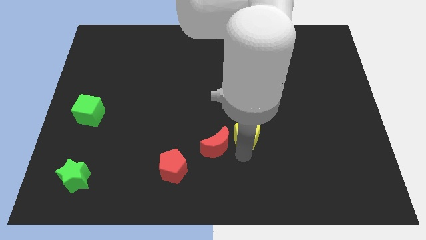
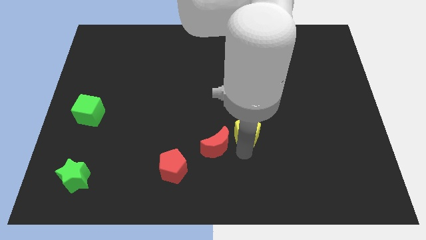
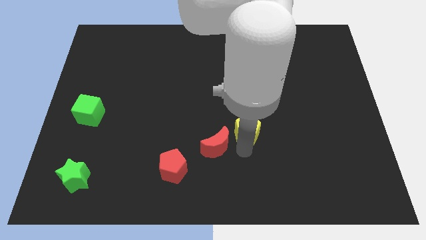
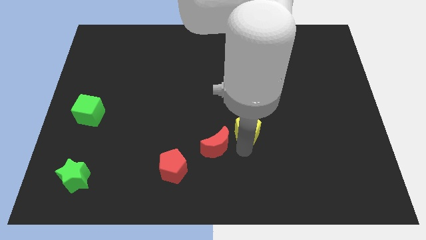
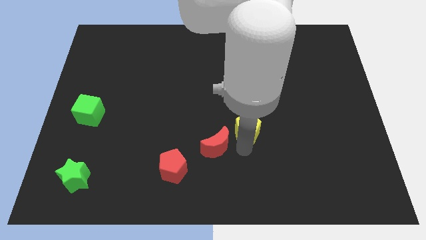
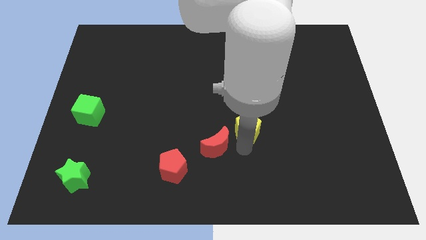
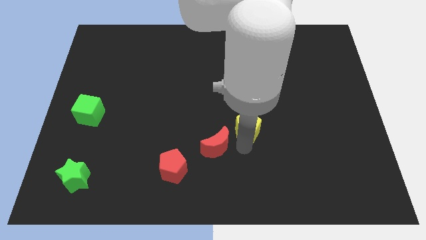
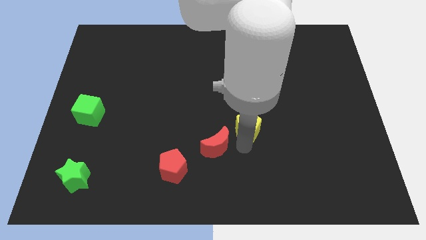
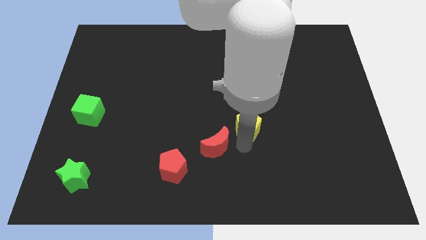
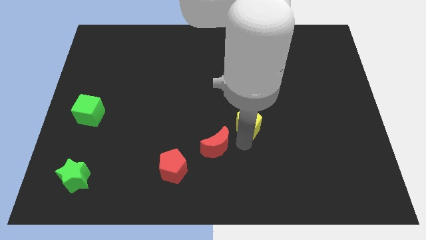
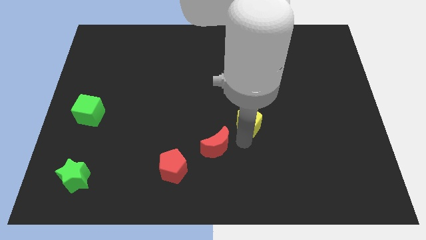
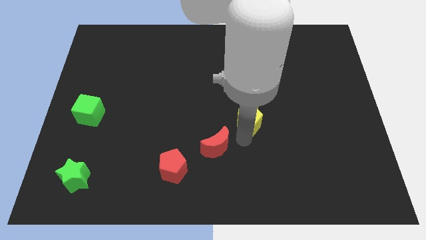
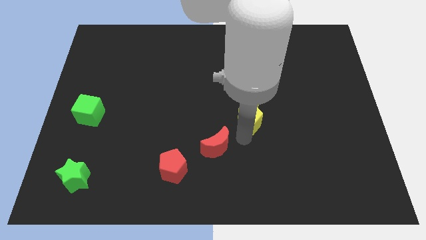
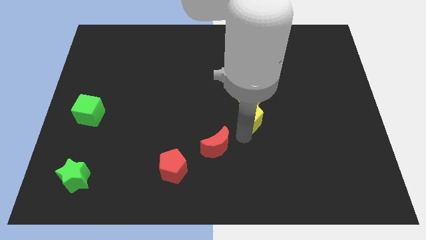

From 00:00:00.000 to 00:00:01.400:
place the yellow pentagon below the yellow star

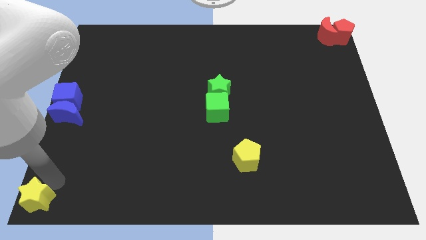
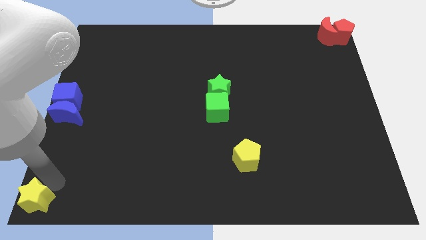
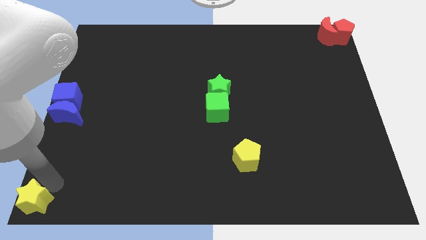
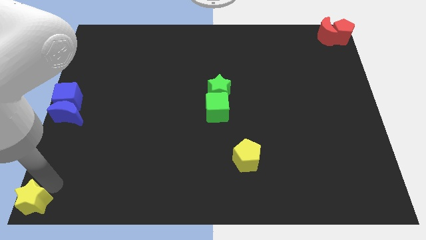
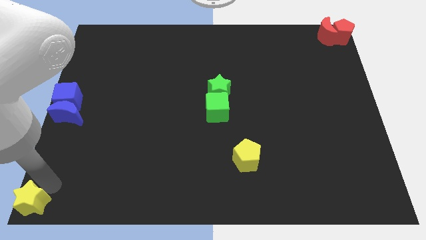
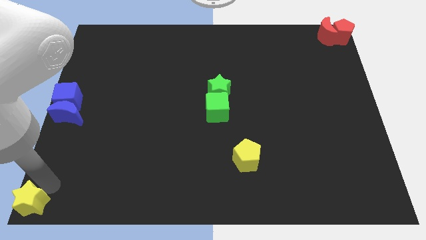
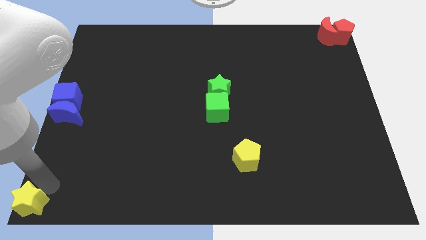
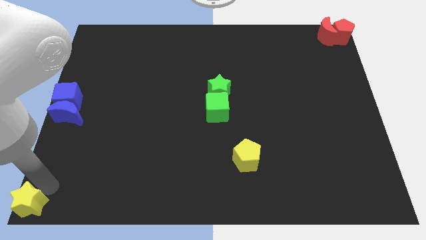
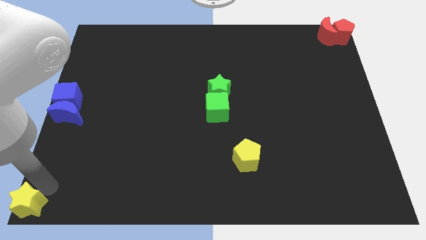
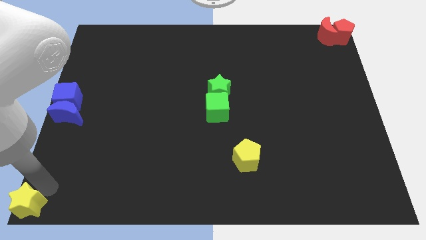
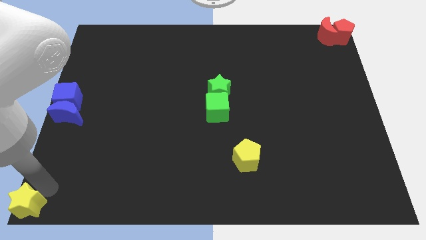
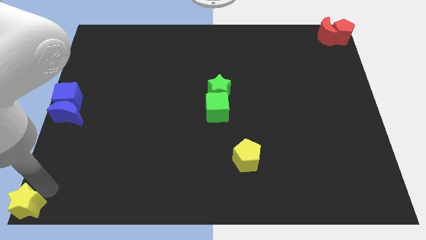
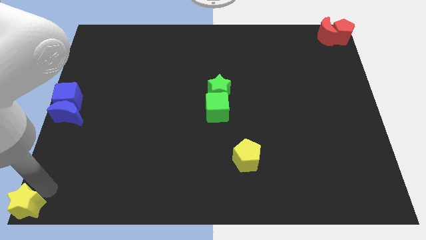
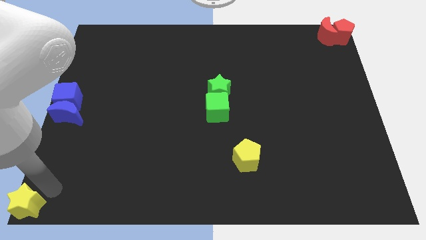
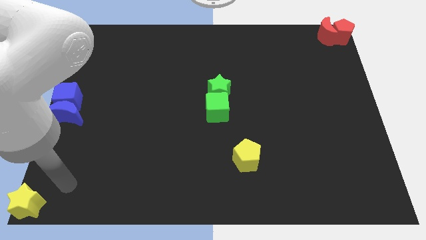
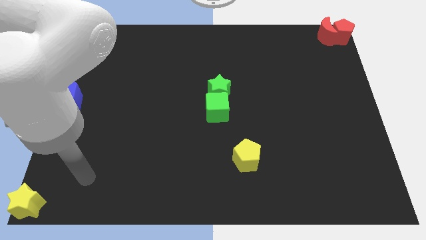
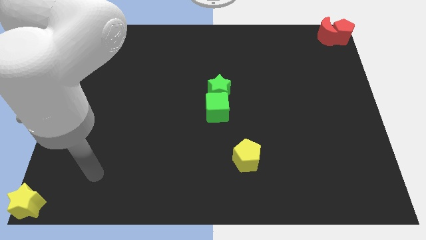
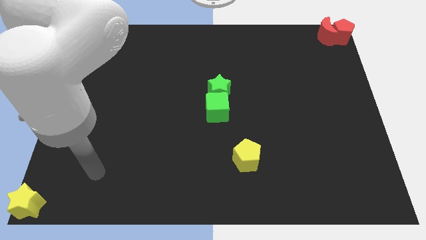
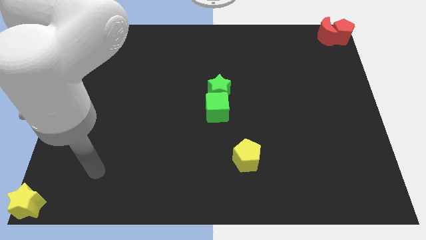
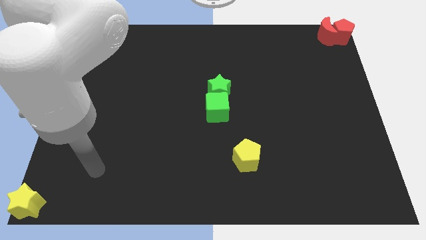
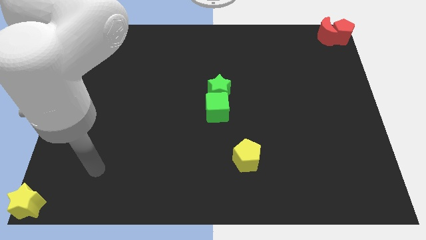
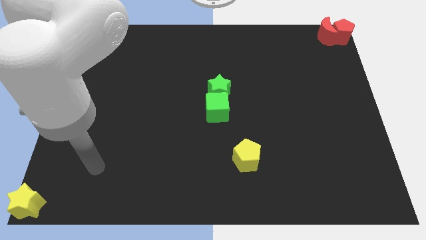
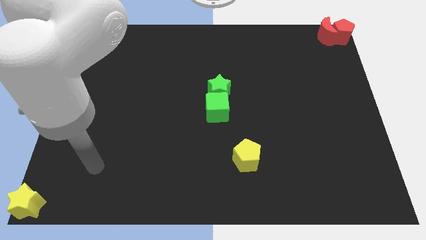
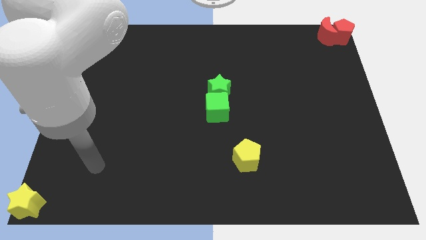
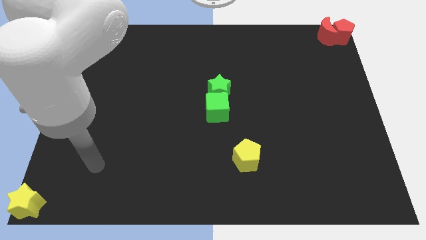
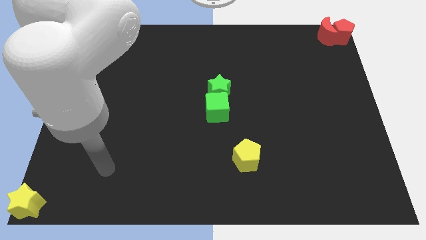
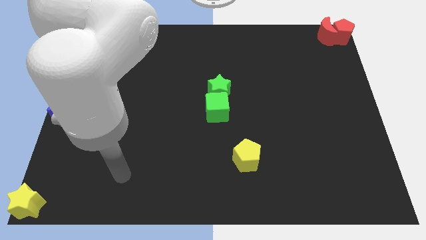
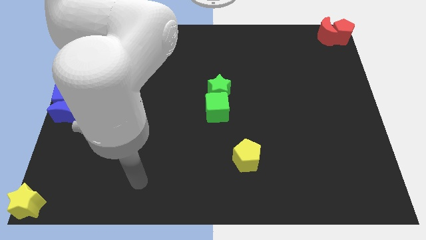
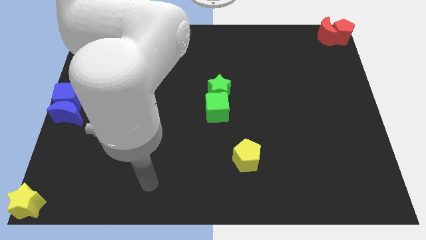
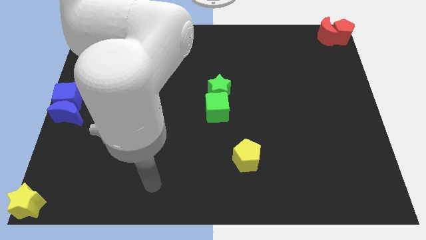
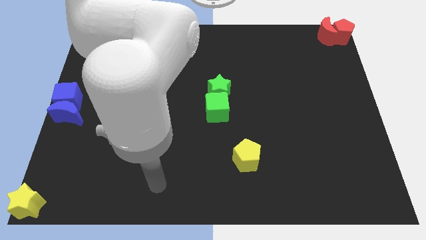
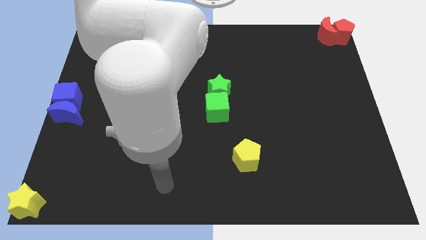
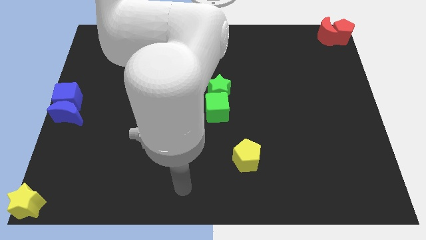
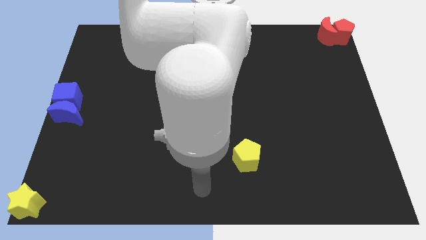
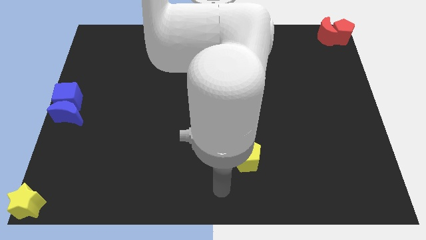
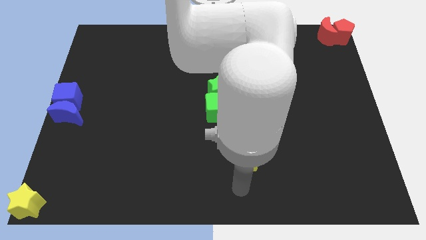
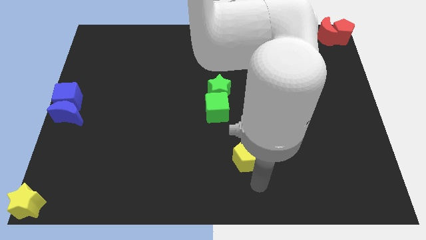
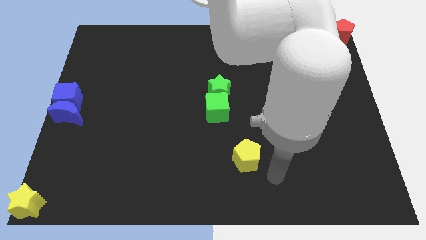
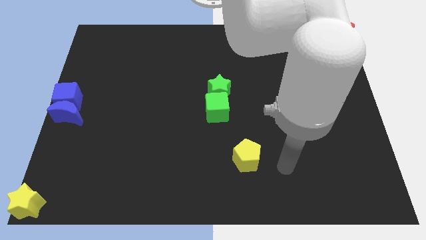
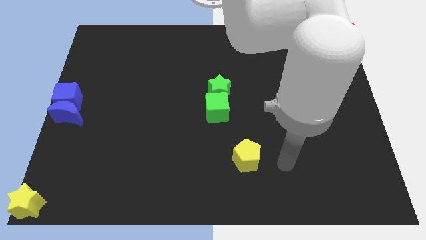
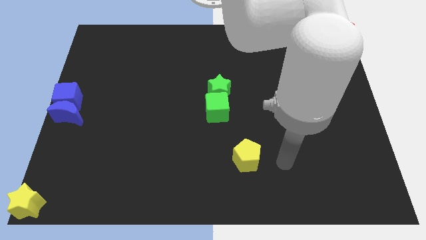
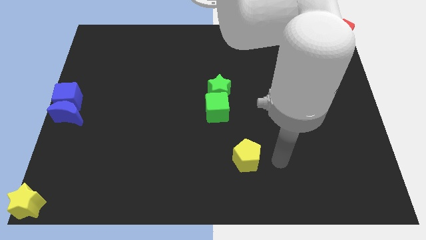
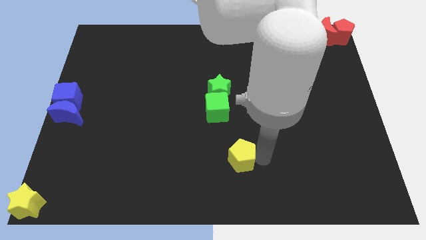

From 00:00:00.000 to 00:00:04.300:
move your hand to the right of the yellow pentagon

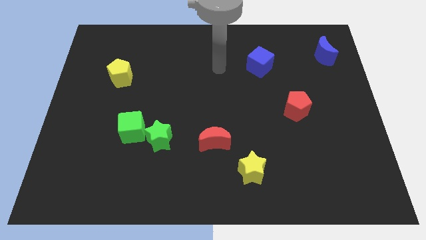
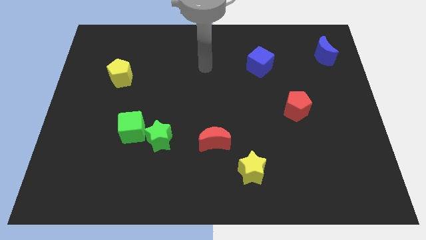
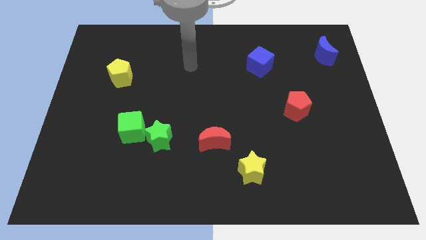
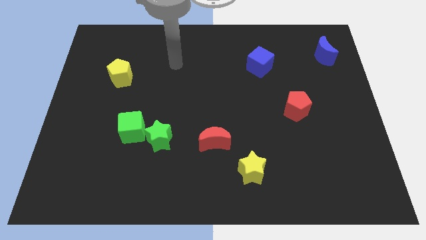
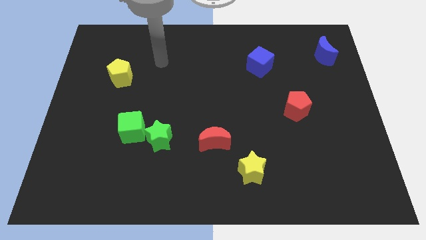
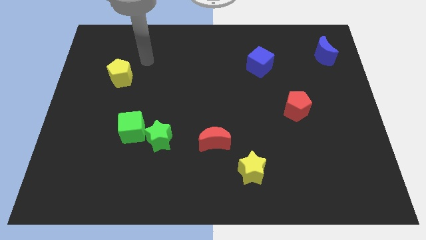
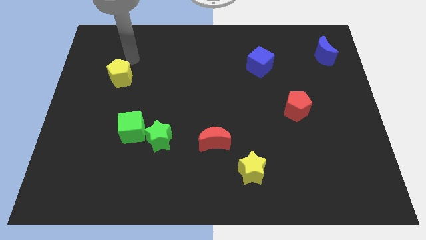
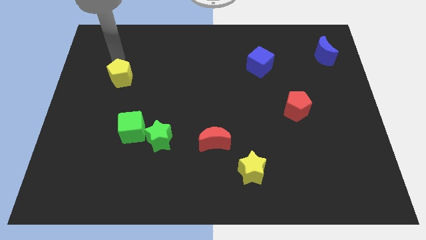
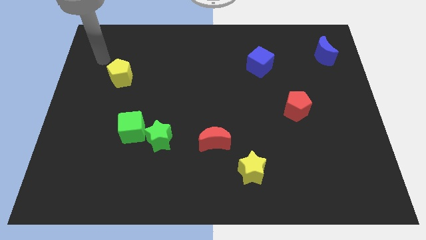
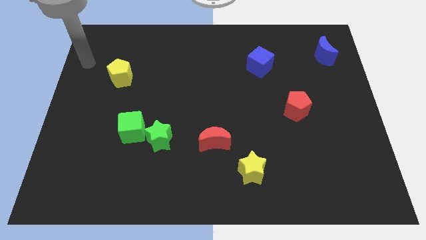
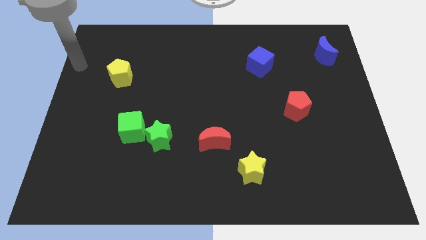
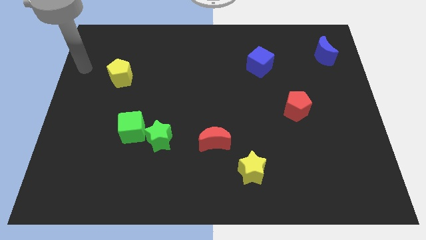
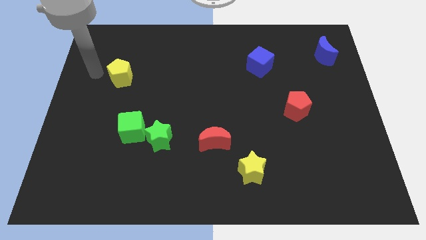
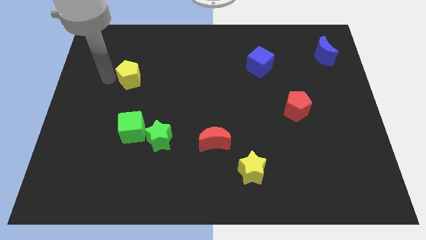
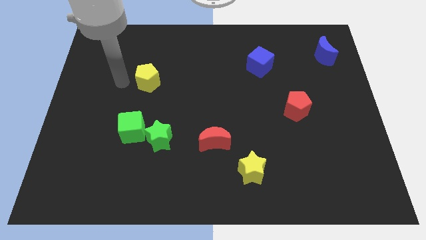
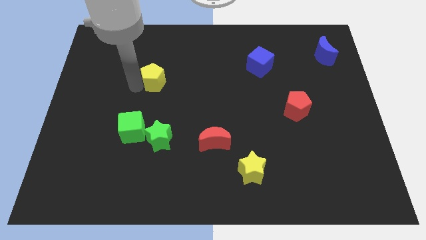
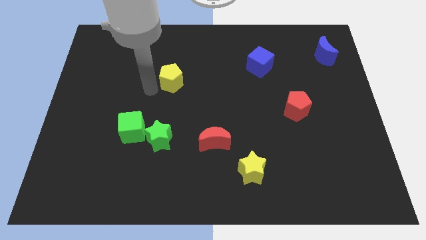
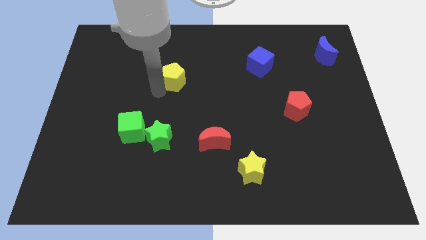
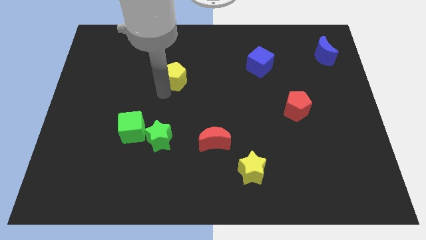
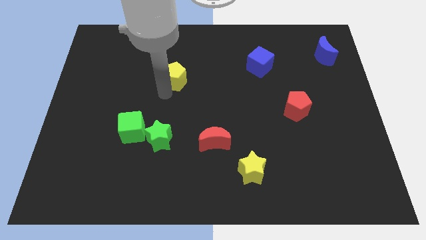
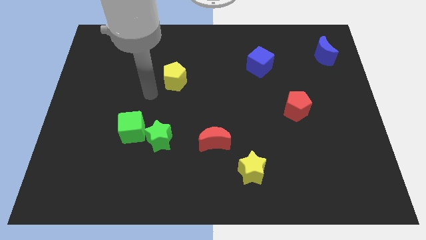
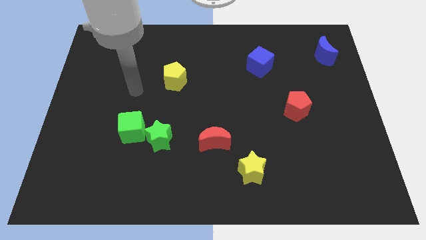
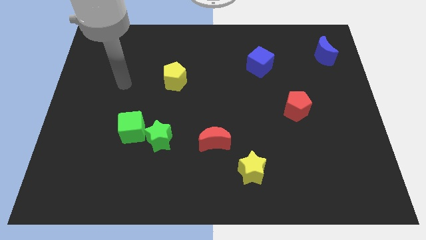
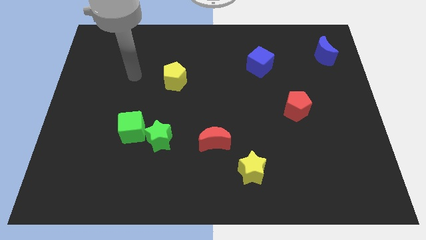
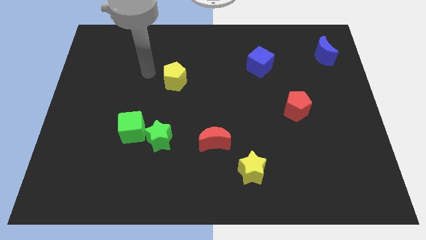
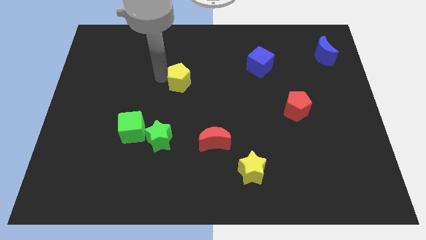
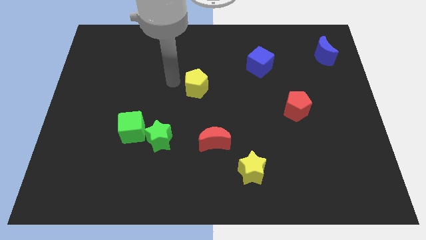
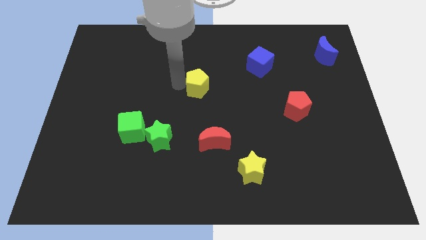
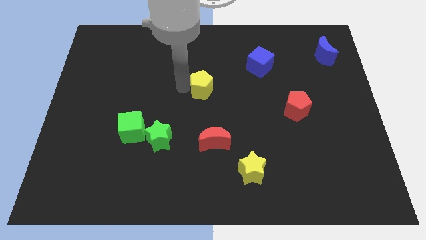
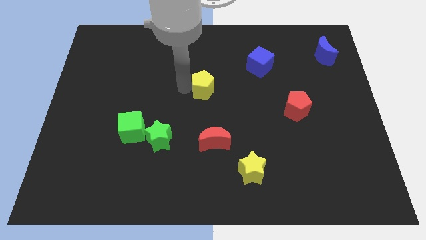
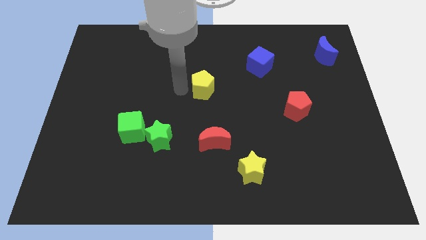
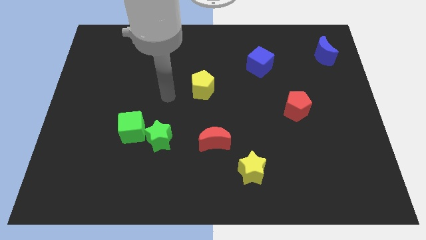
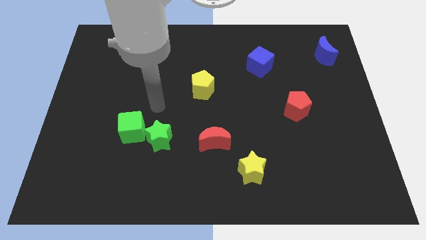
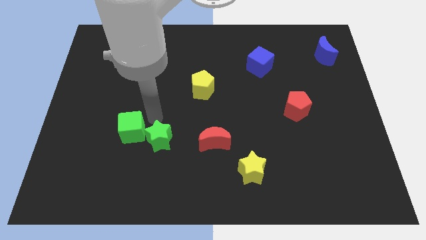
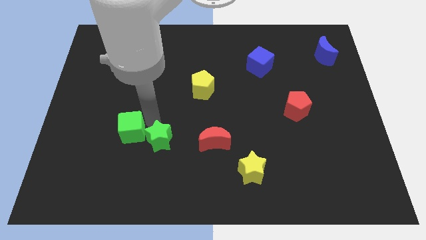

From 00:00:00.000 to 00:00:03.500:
place yellow pentagon above the red crescent
